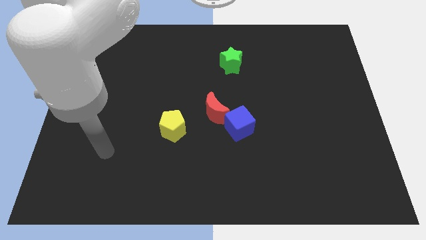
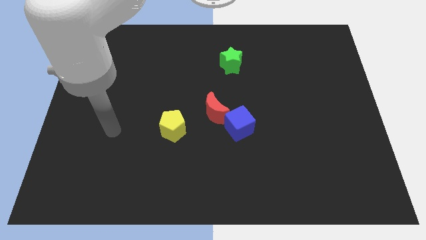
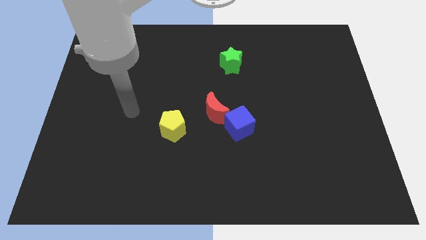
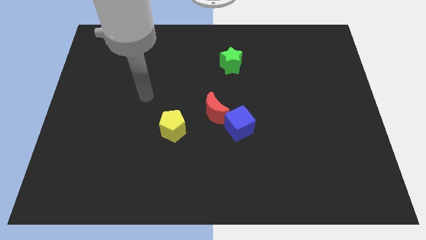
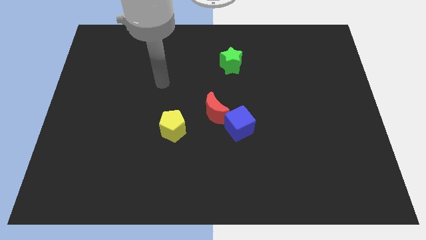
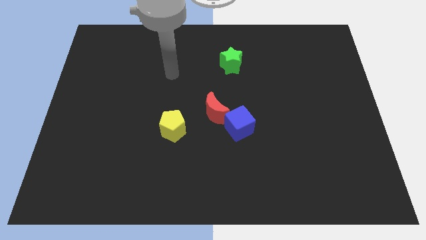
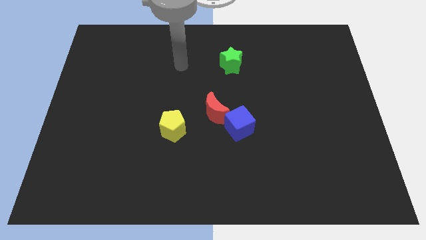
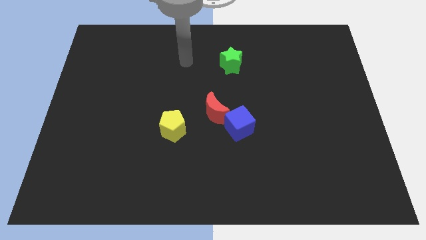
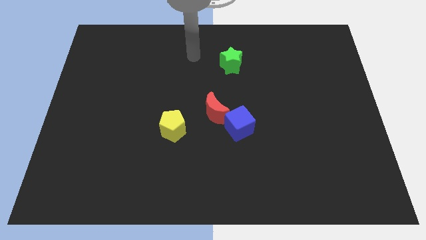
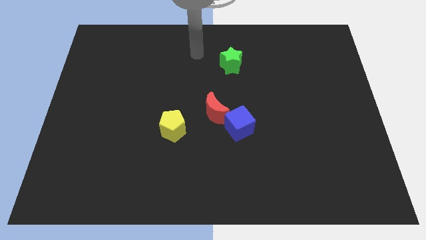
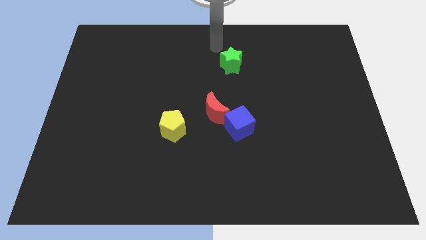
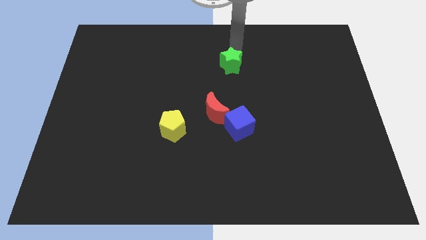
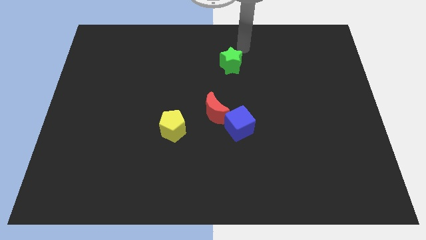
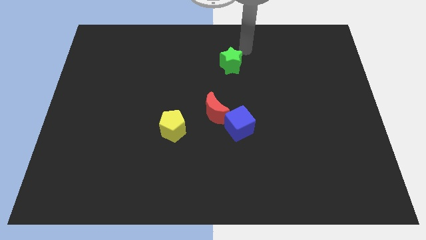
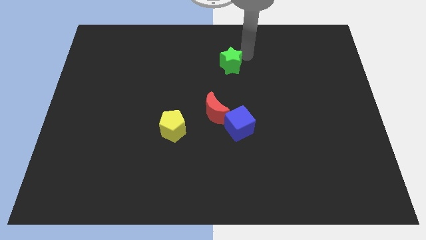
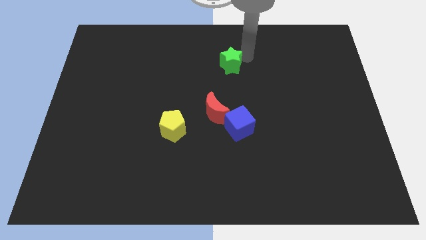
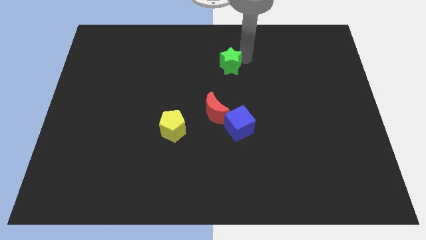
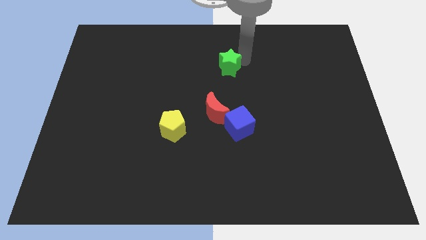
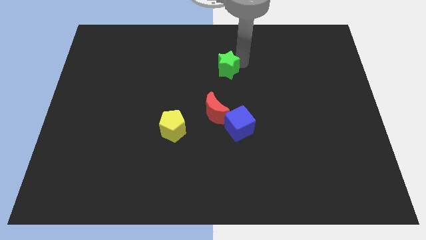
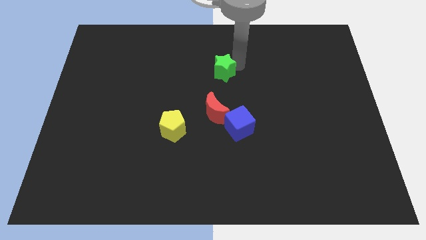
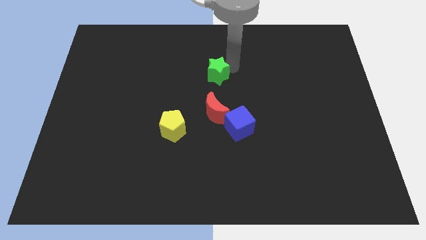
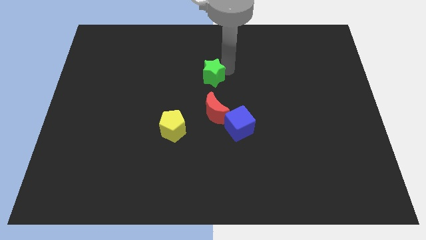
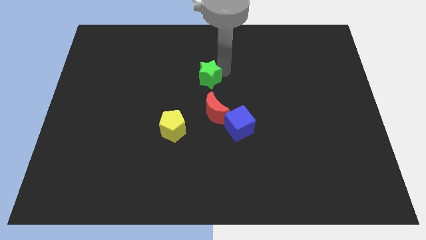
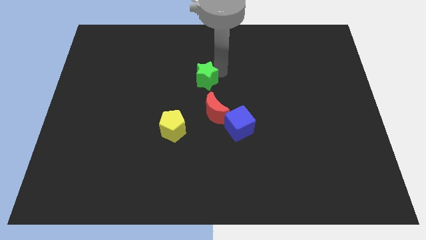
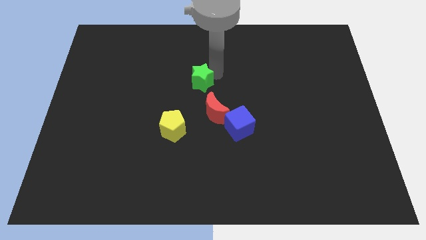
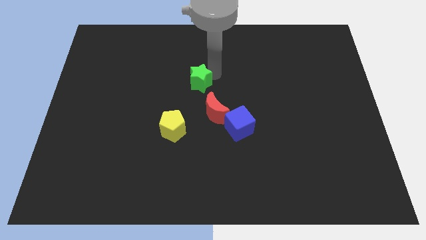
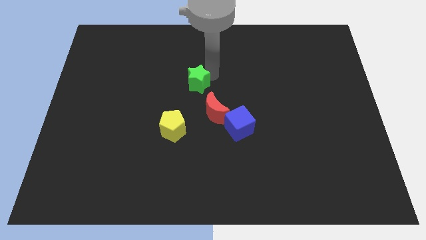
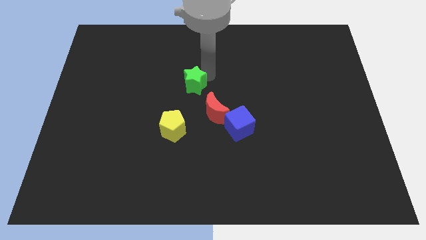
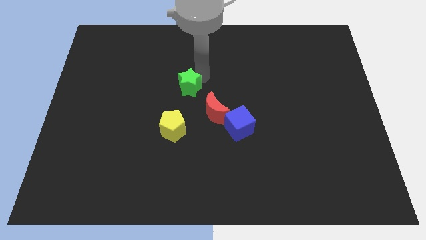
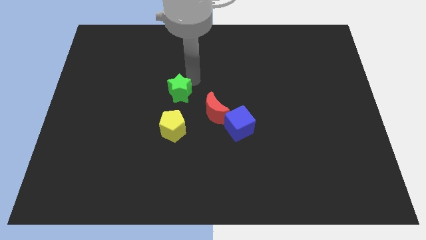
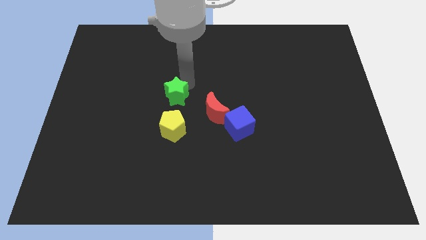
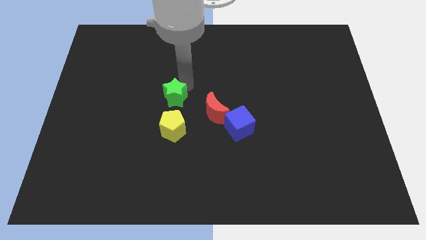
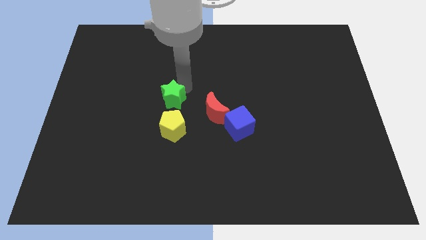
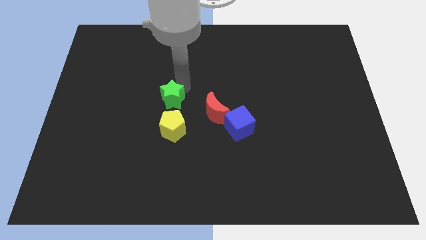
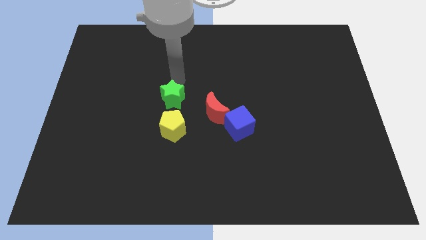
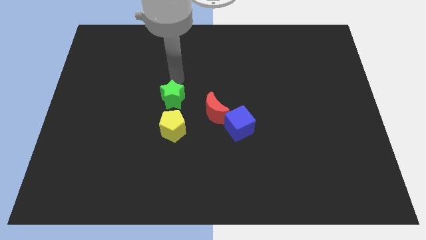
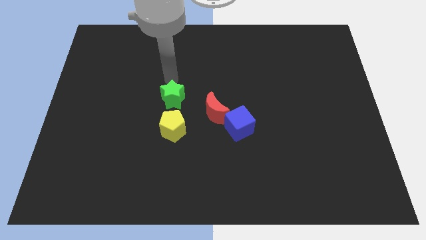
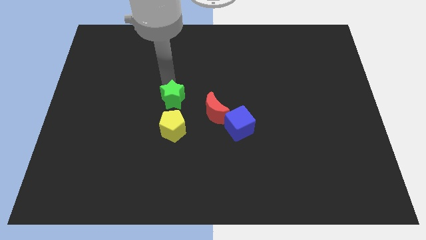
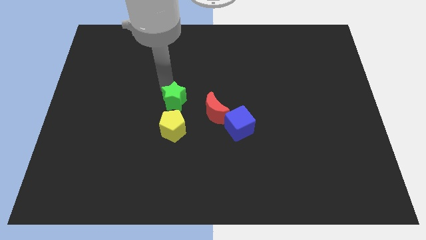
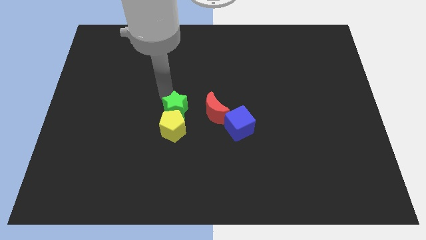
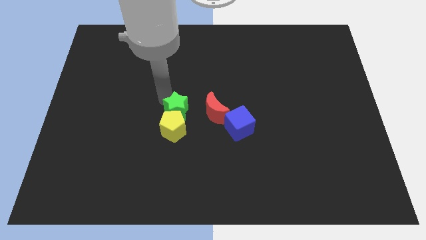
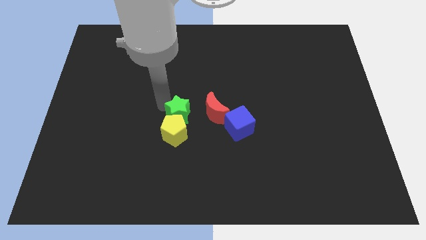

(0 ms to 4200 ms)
slide the green block next to the pentagon

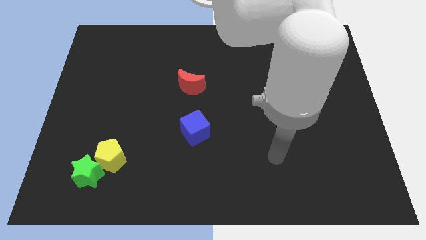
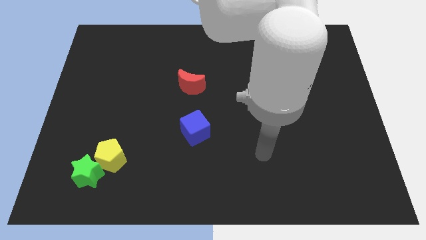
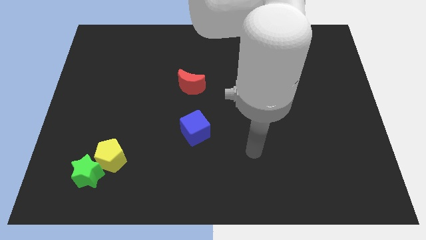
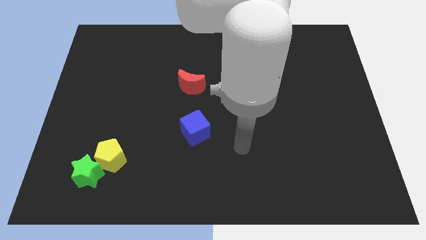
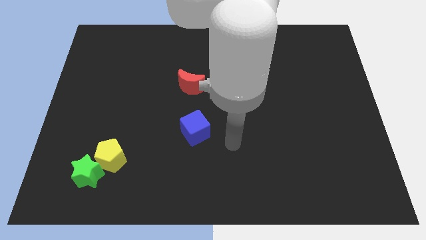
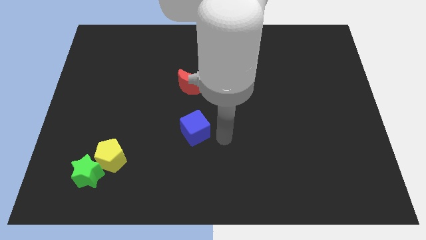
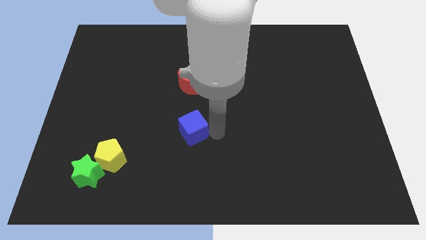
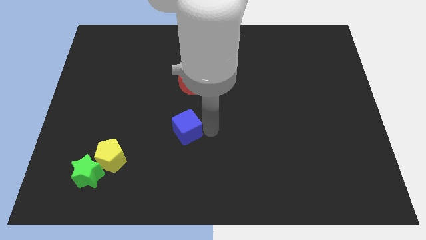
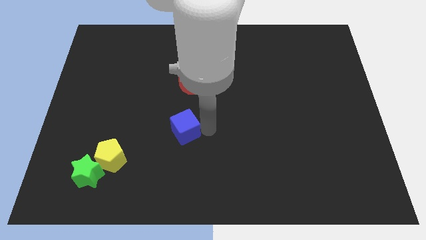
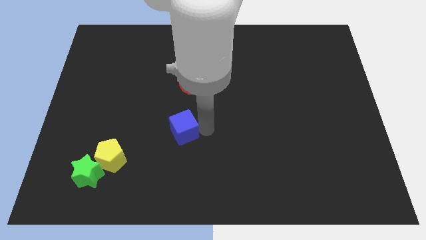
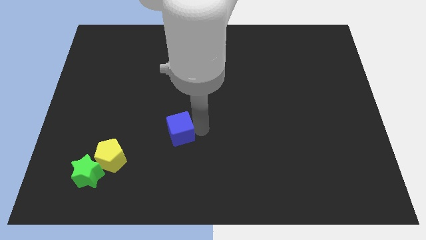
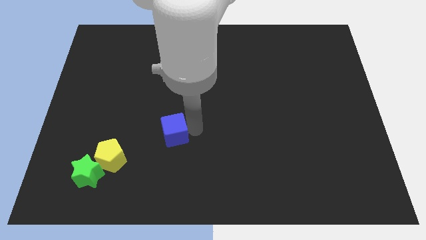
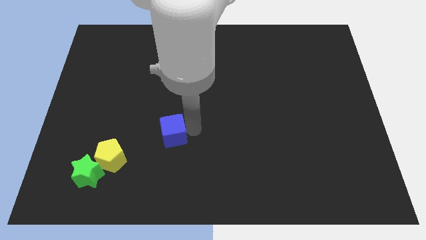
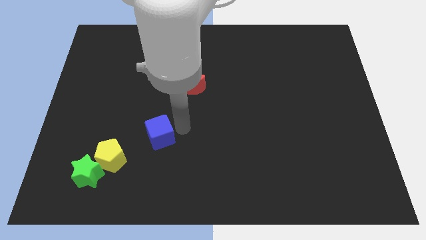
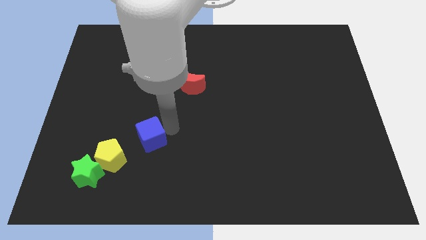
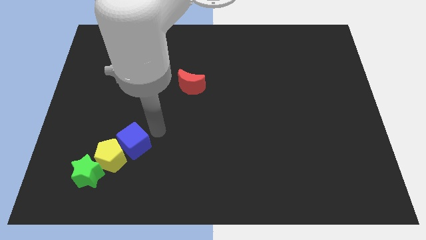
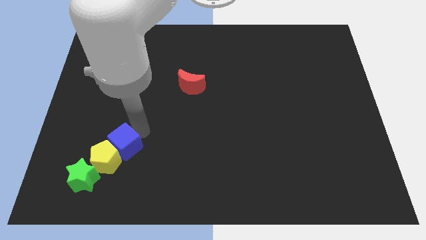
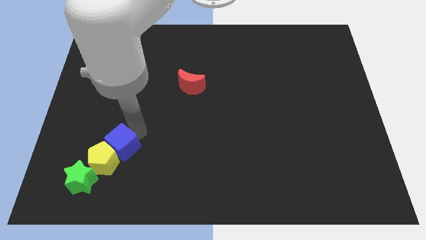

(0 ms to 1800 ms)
push the cube close to the pentagon

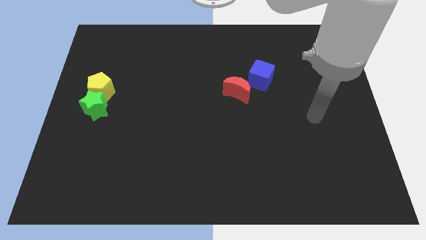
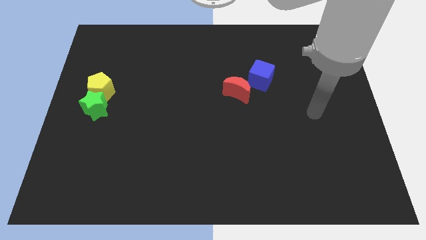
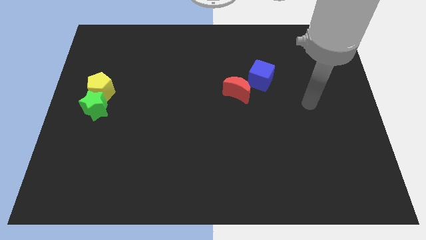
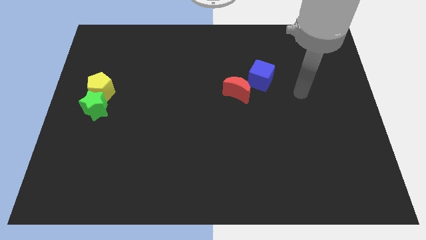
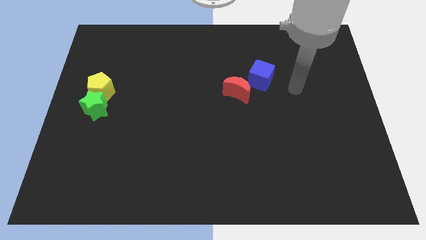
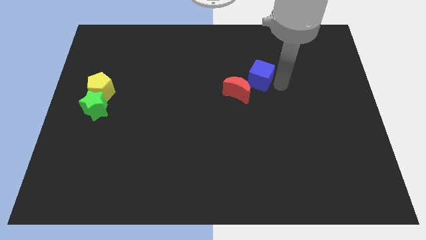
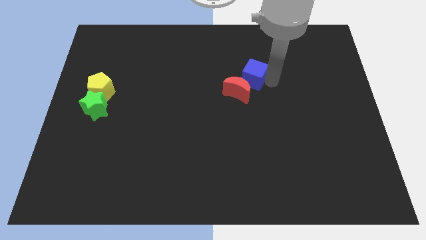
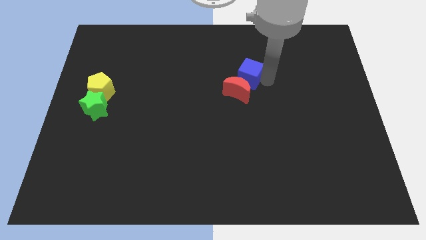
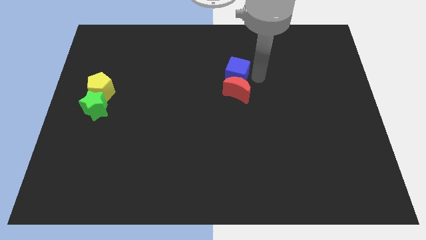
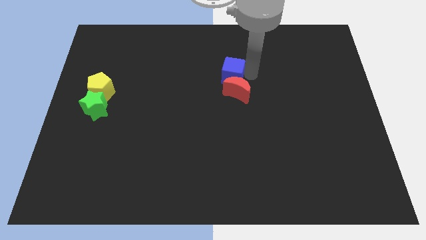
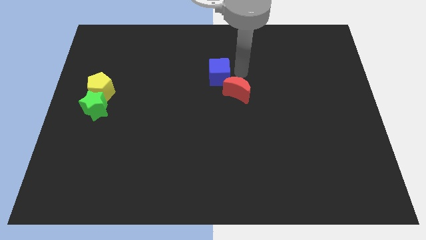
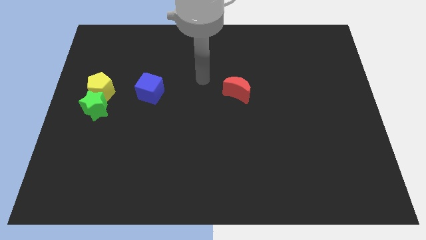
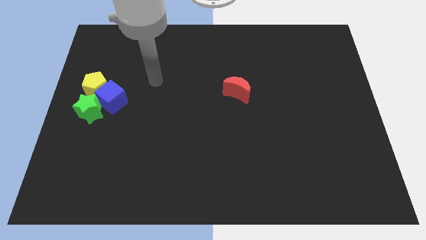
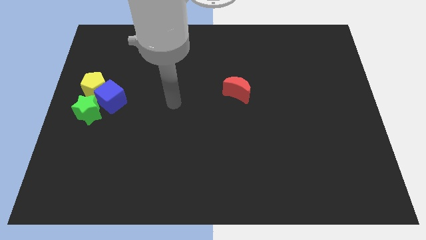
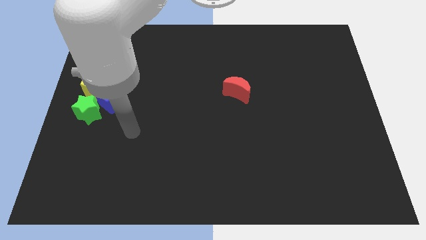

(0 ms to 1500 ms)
slide the cube next to the yellow block

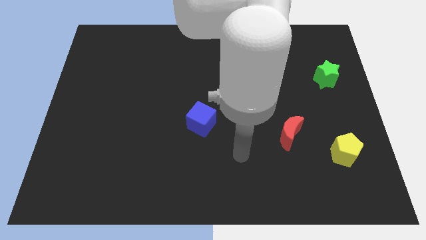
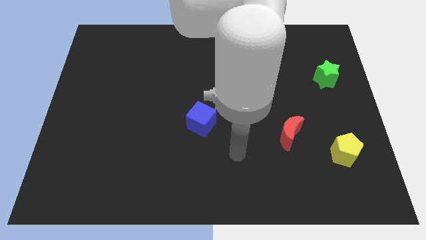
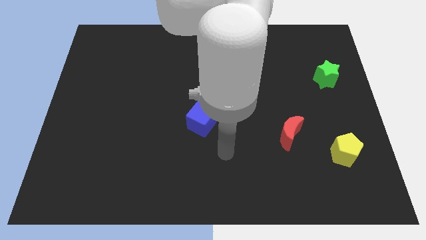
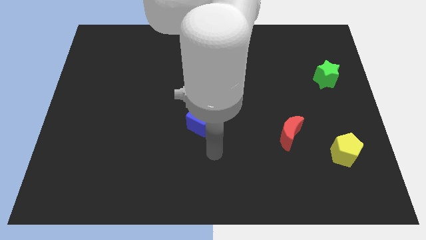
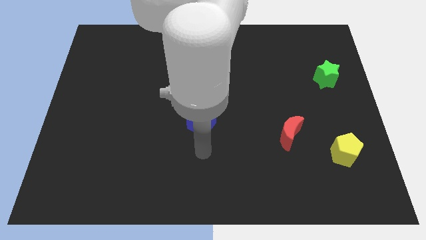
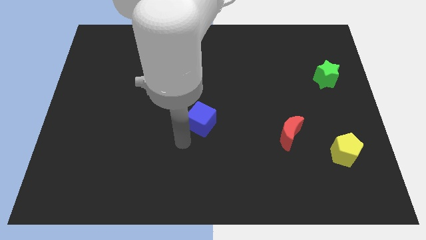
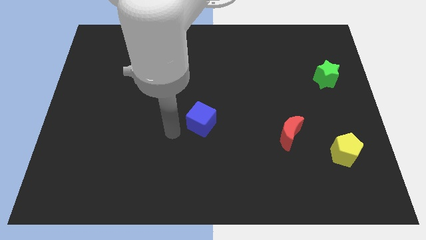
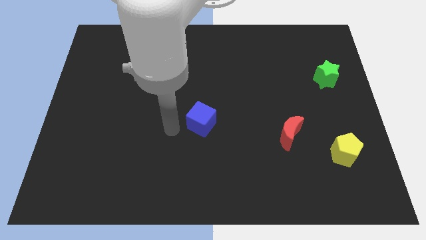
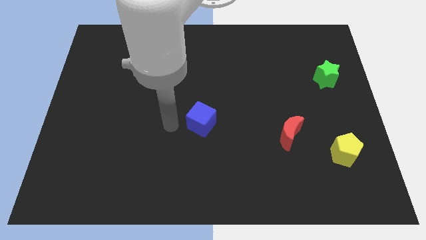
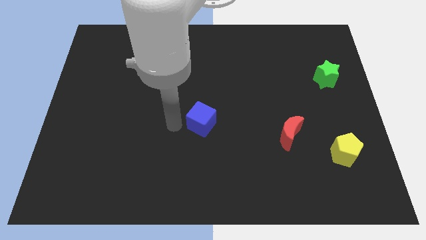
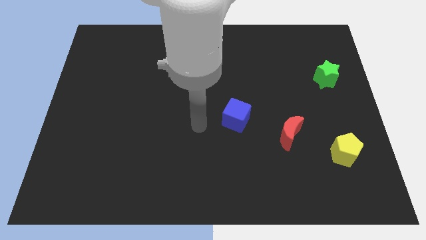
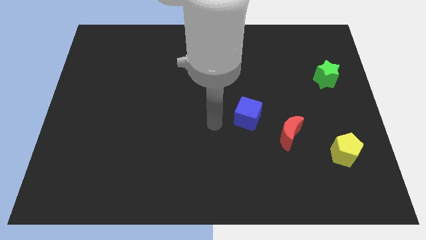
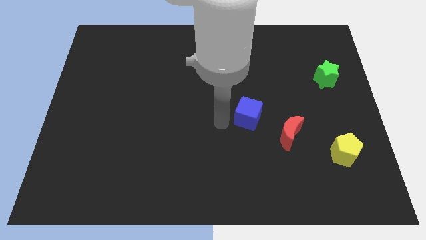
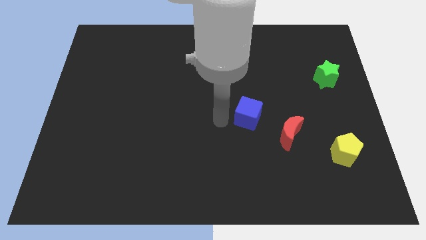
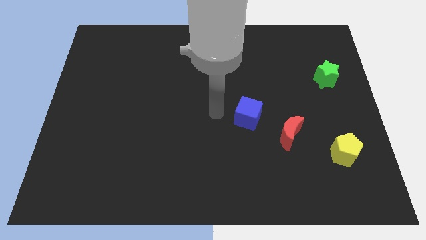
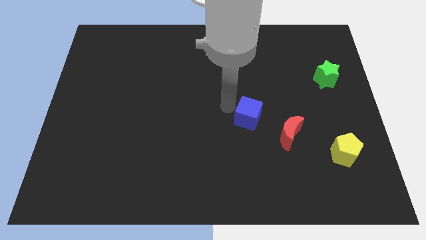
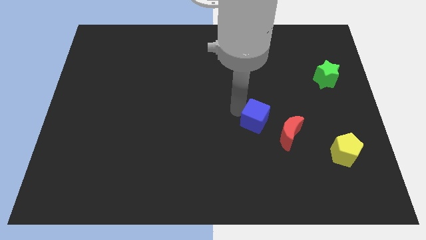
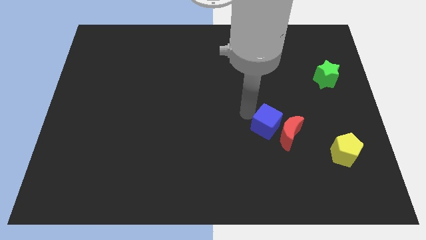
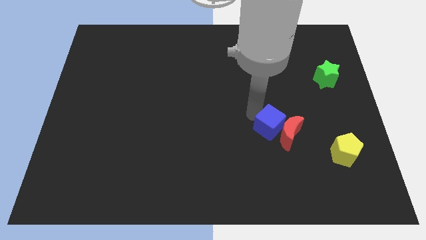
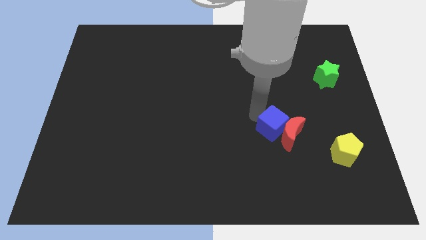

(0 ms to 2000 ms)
slide the cube next to the red block
